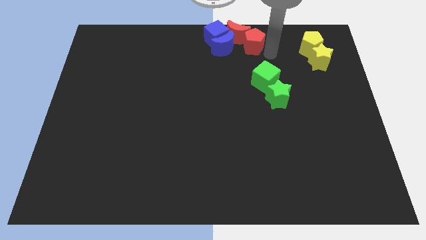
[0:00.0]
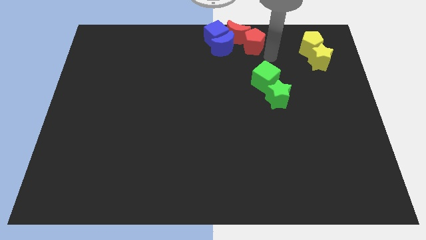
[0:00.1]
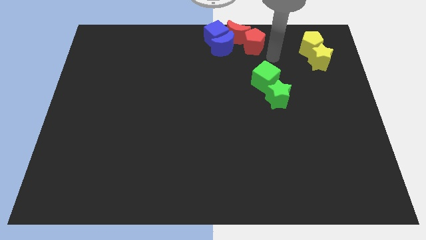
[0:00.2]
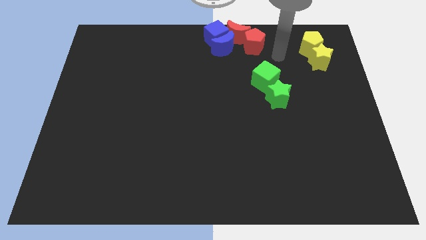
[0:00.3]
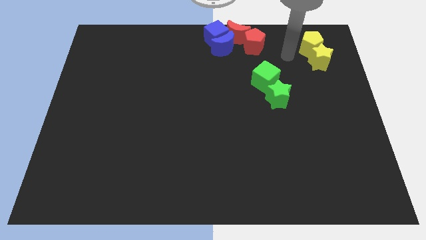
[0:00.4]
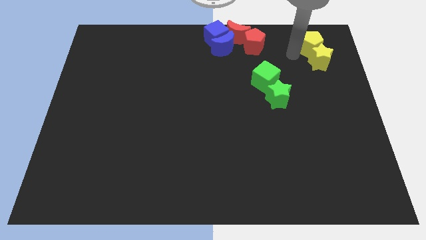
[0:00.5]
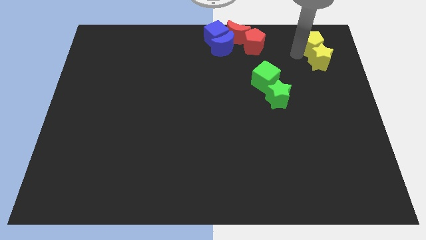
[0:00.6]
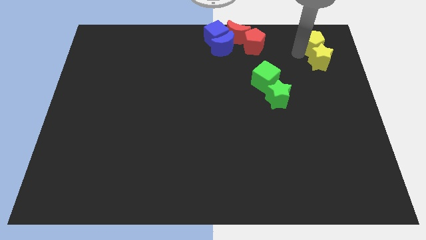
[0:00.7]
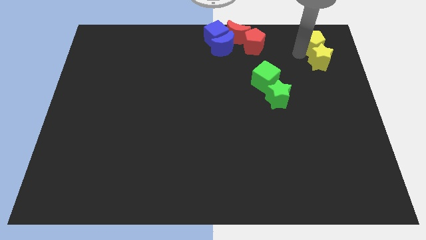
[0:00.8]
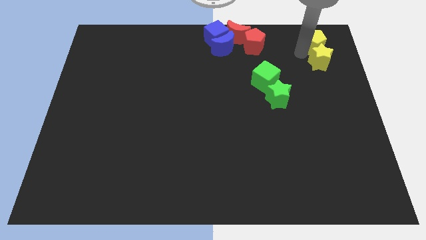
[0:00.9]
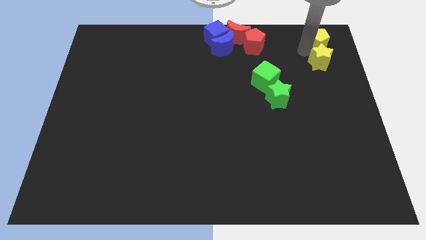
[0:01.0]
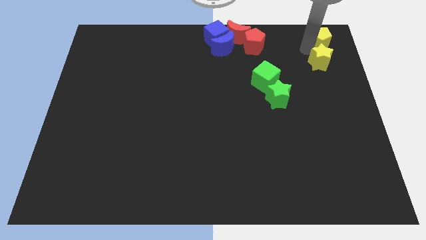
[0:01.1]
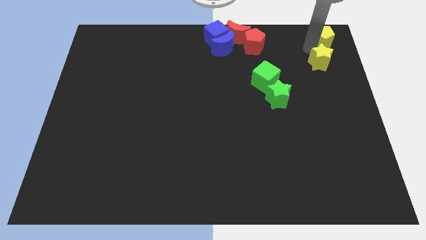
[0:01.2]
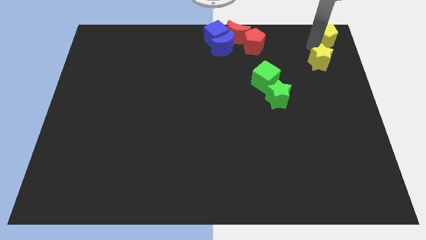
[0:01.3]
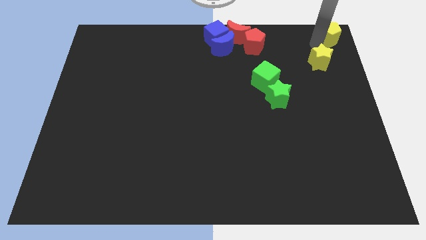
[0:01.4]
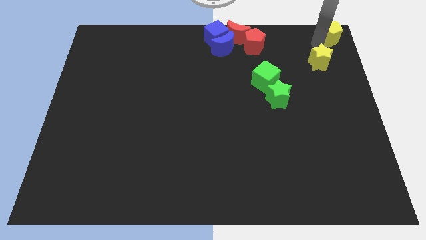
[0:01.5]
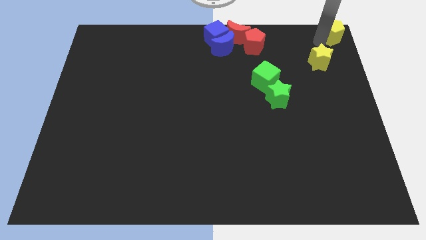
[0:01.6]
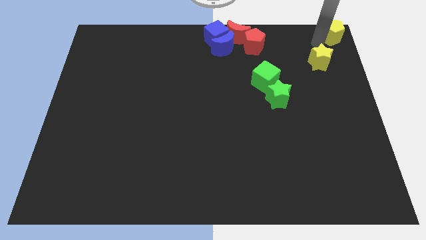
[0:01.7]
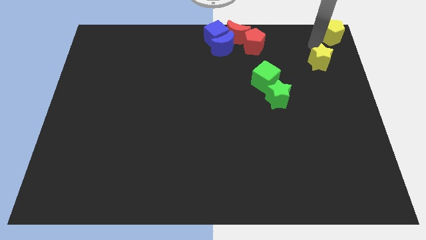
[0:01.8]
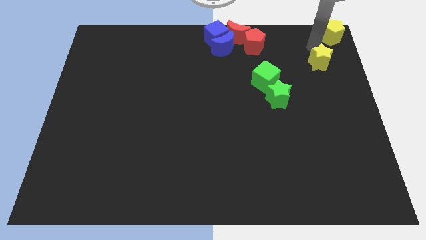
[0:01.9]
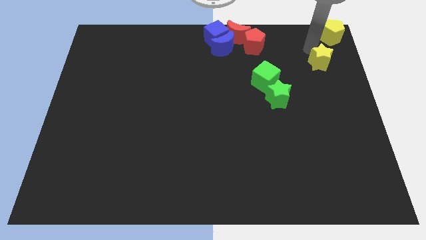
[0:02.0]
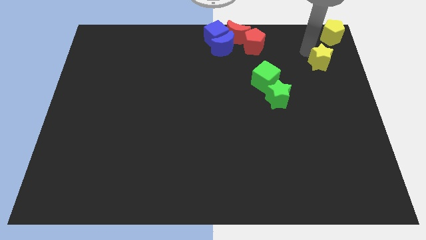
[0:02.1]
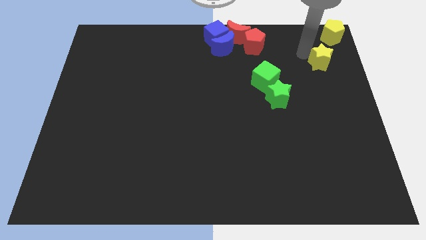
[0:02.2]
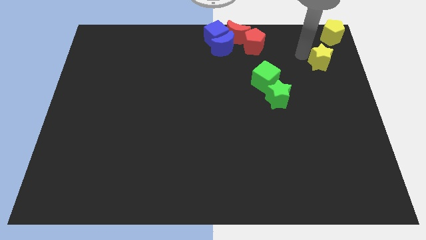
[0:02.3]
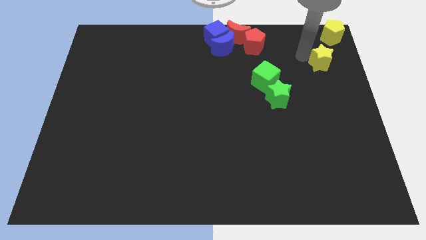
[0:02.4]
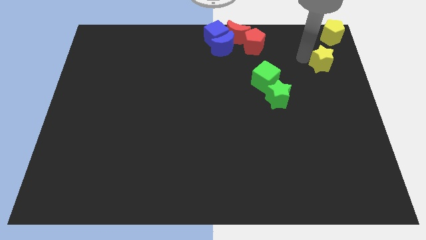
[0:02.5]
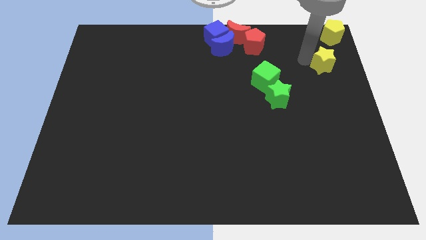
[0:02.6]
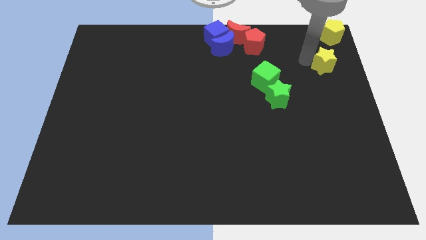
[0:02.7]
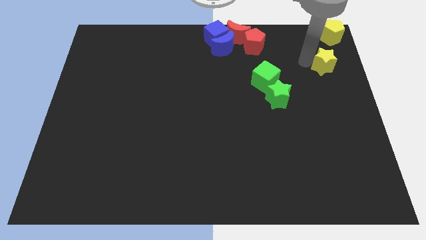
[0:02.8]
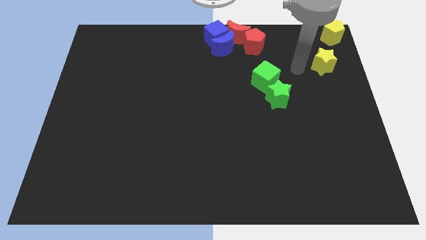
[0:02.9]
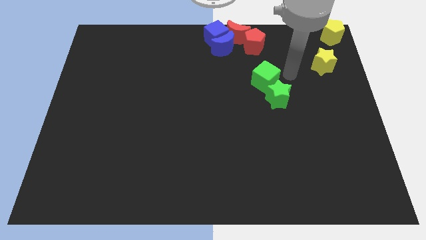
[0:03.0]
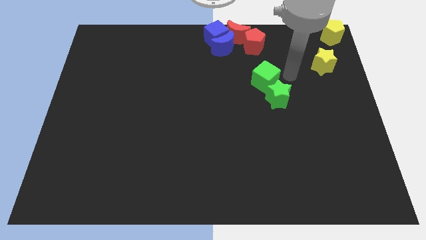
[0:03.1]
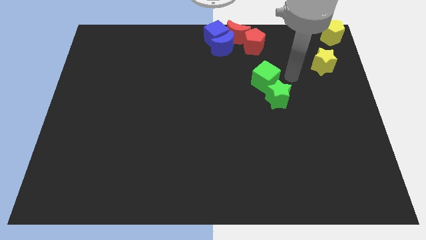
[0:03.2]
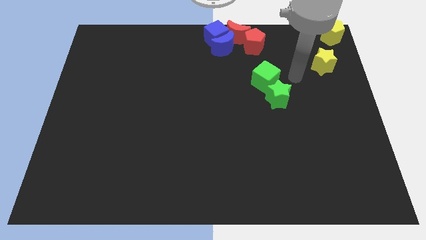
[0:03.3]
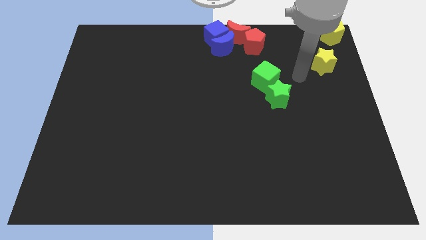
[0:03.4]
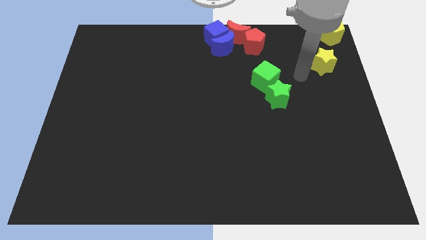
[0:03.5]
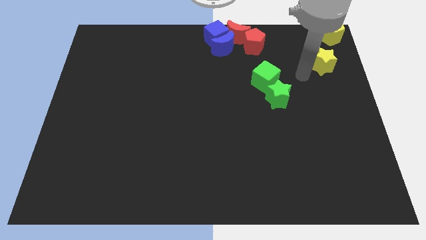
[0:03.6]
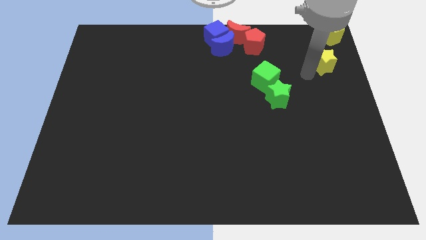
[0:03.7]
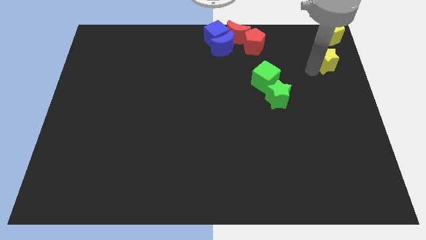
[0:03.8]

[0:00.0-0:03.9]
move the yellow pentagon to the top left

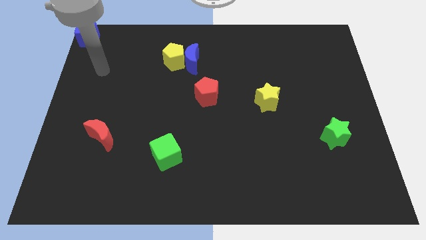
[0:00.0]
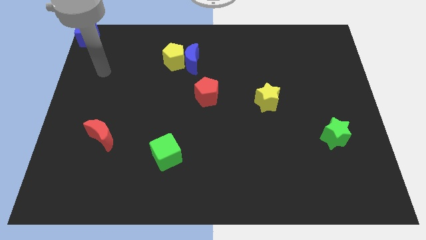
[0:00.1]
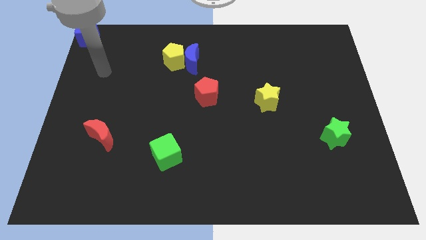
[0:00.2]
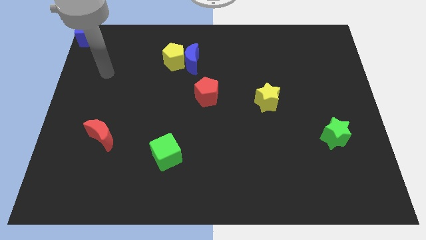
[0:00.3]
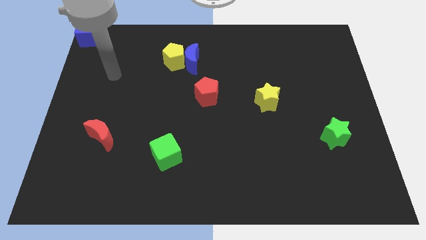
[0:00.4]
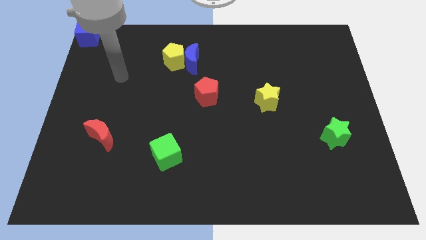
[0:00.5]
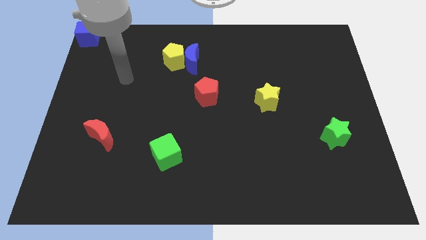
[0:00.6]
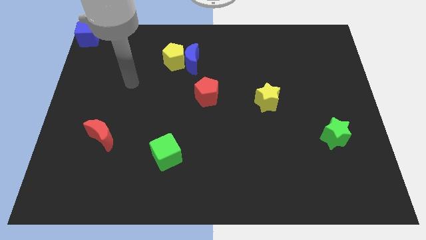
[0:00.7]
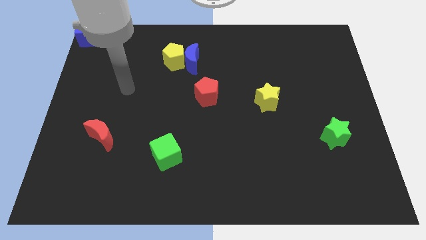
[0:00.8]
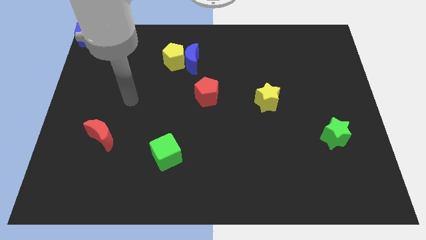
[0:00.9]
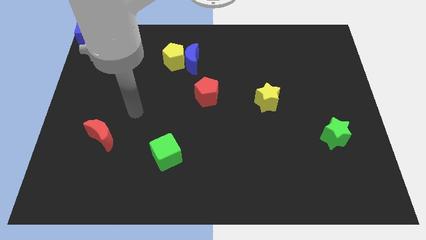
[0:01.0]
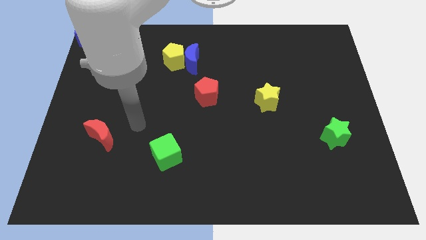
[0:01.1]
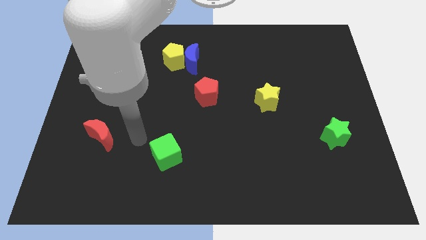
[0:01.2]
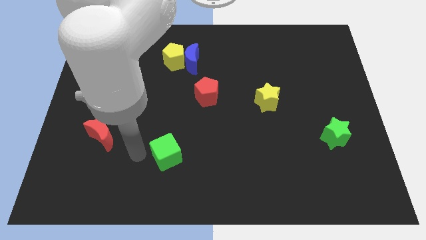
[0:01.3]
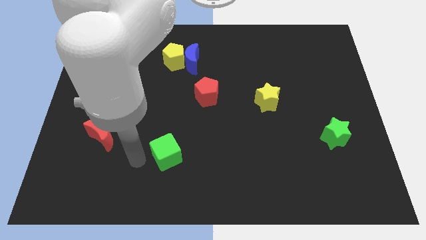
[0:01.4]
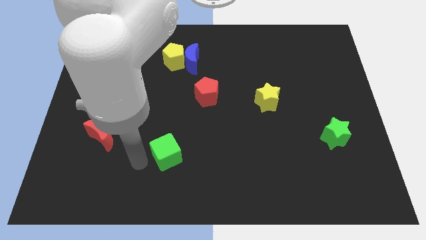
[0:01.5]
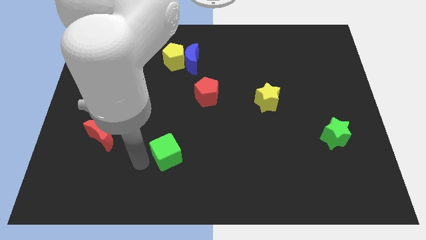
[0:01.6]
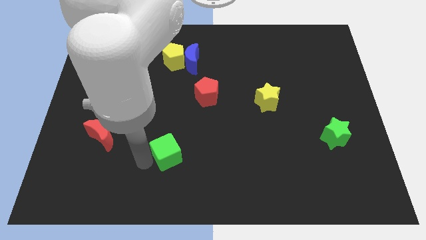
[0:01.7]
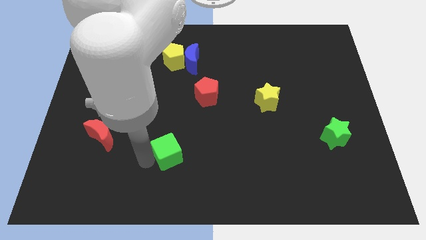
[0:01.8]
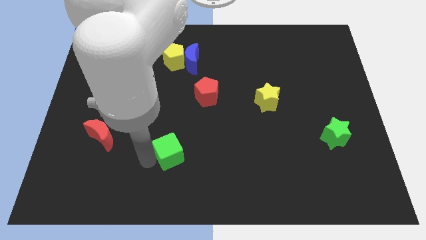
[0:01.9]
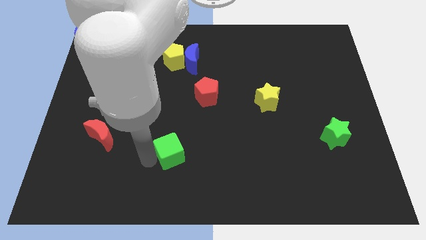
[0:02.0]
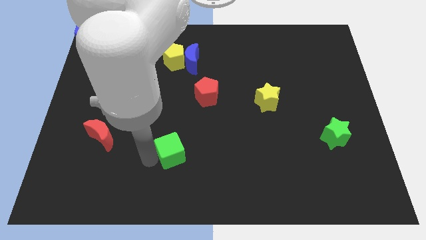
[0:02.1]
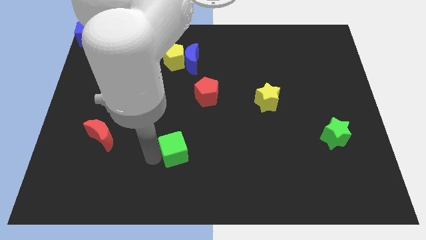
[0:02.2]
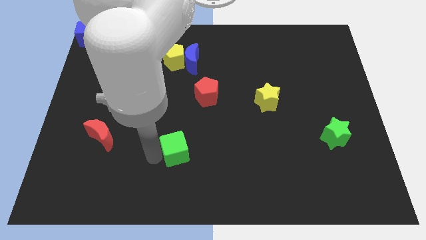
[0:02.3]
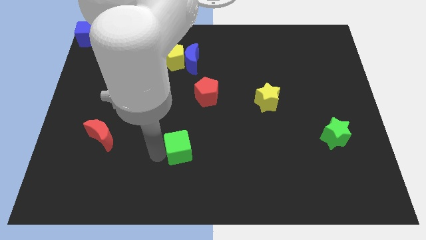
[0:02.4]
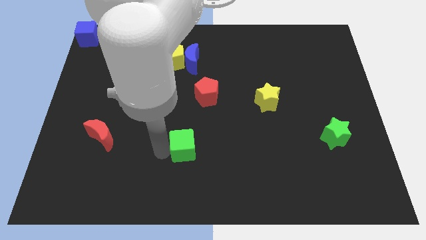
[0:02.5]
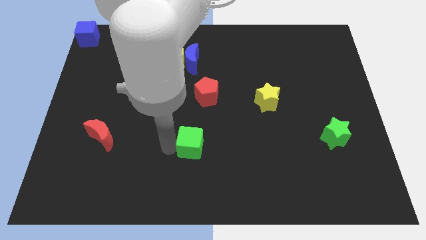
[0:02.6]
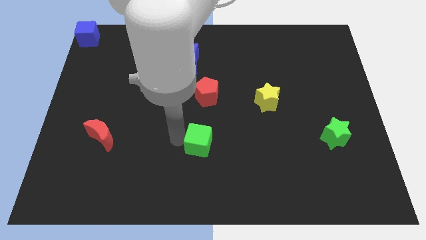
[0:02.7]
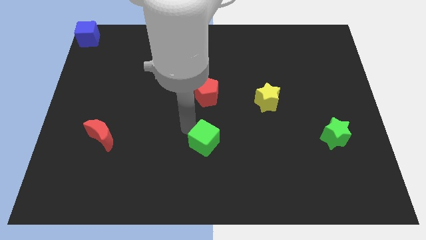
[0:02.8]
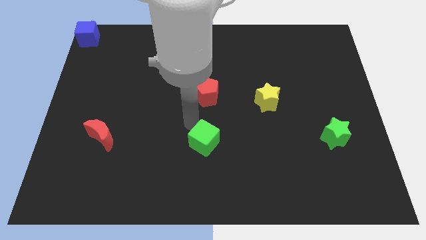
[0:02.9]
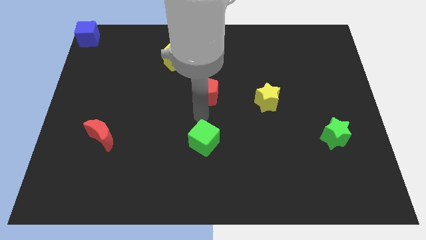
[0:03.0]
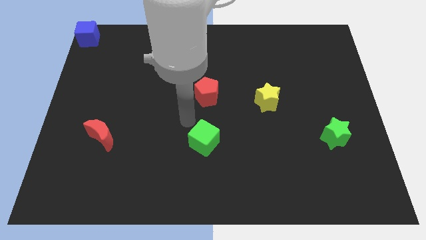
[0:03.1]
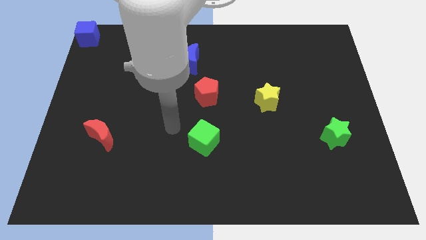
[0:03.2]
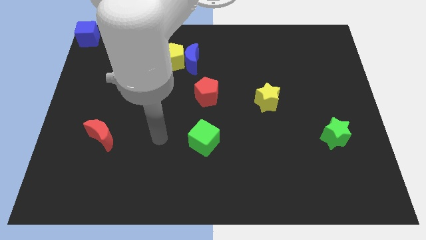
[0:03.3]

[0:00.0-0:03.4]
place the green cube below red pentagon

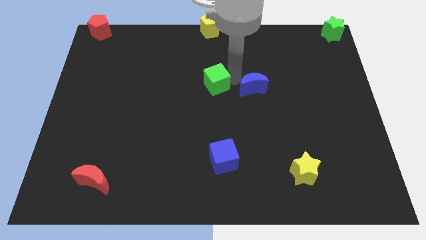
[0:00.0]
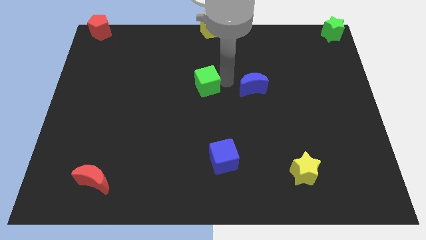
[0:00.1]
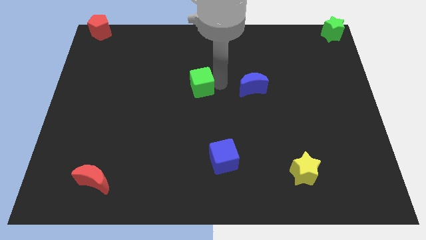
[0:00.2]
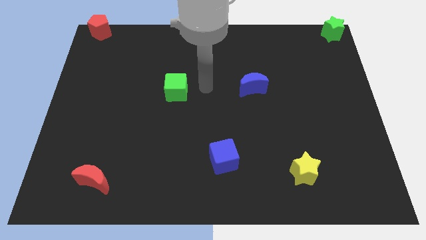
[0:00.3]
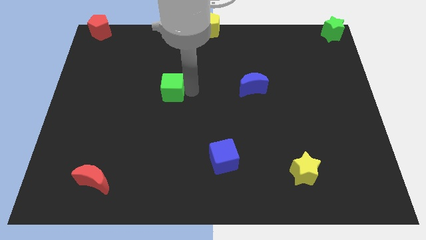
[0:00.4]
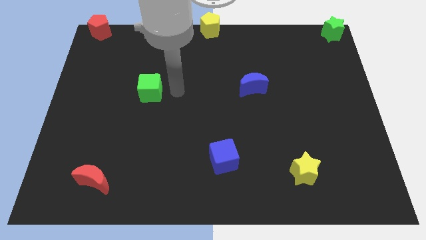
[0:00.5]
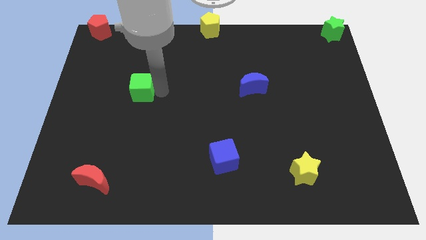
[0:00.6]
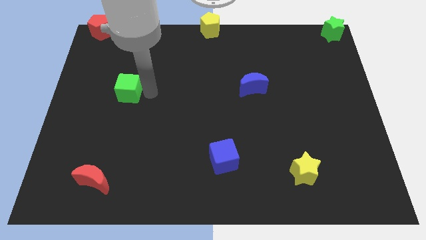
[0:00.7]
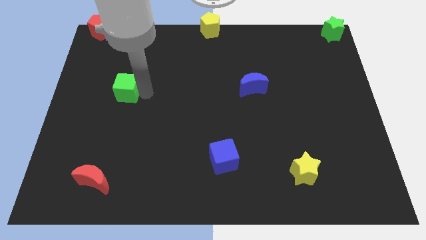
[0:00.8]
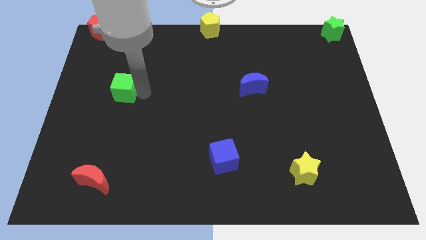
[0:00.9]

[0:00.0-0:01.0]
push the green cube towards the left side of the board

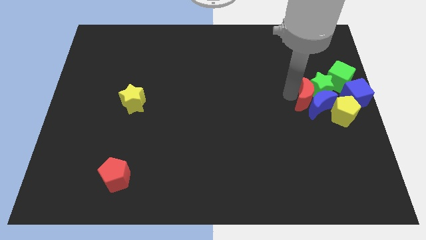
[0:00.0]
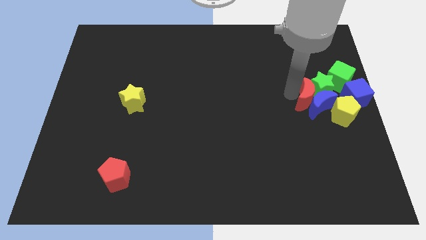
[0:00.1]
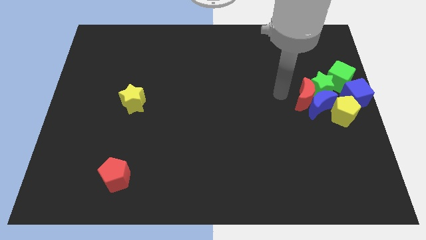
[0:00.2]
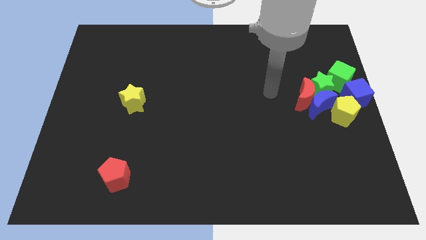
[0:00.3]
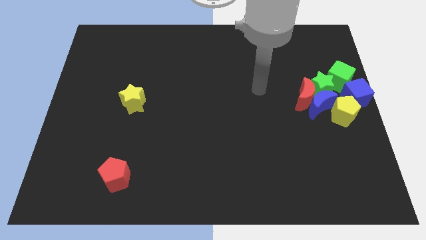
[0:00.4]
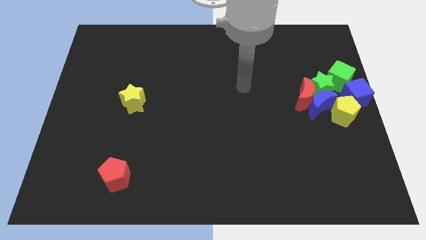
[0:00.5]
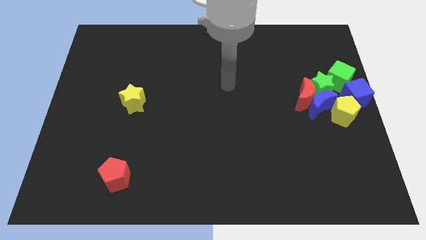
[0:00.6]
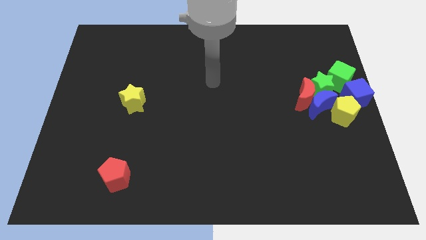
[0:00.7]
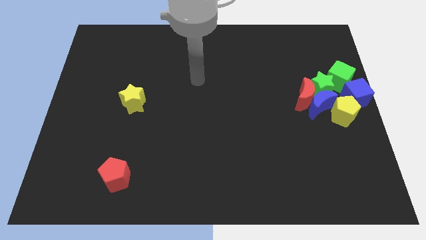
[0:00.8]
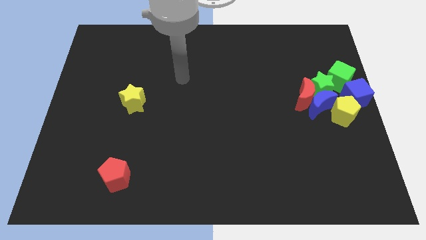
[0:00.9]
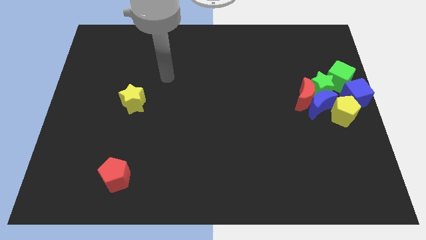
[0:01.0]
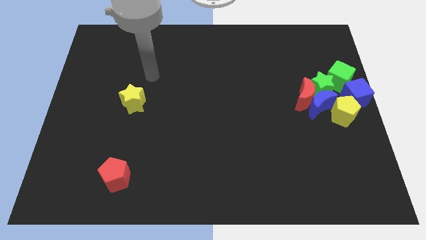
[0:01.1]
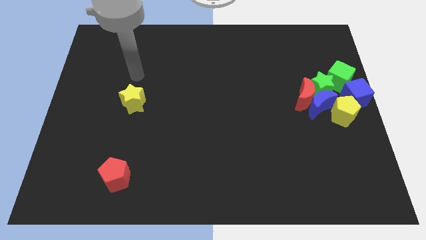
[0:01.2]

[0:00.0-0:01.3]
point your arm at the top of the yellow star
